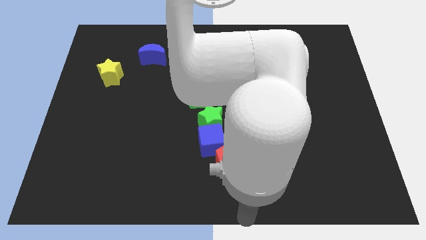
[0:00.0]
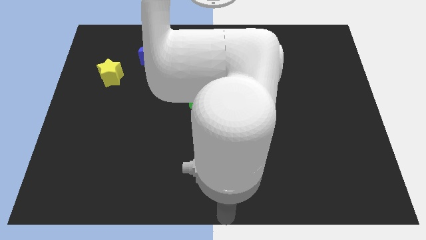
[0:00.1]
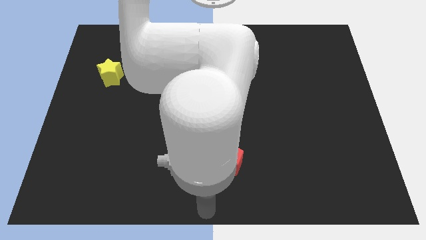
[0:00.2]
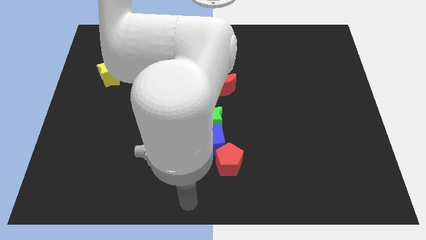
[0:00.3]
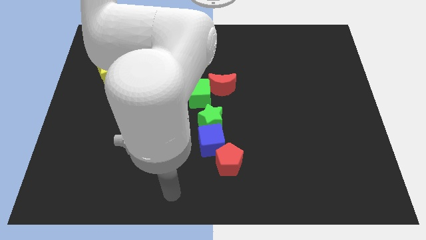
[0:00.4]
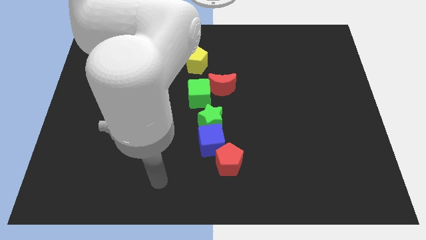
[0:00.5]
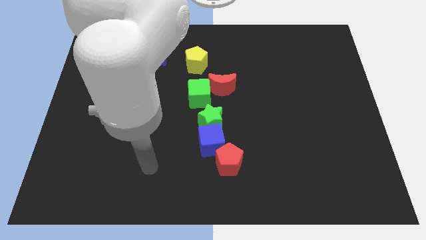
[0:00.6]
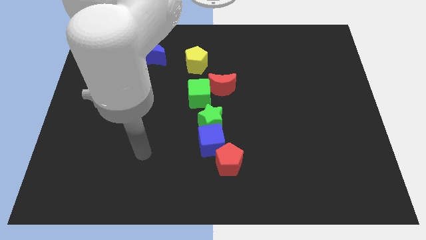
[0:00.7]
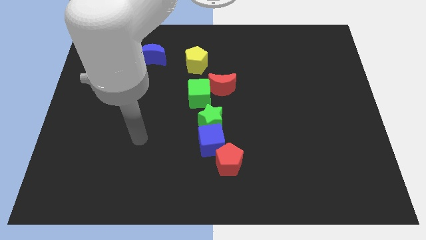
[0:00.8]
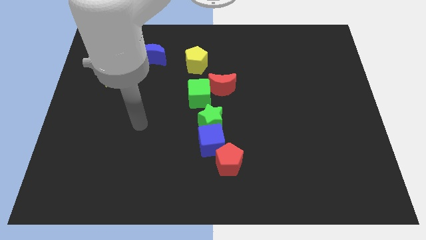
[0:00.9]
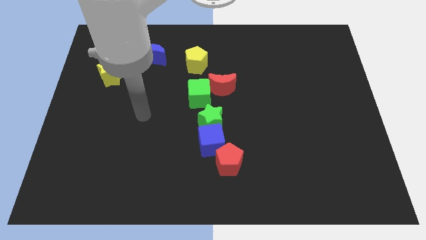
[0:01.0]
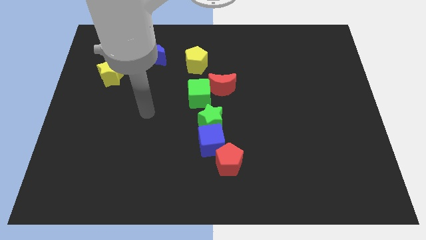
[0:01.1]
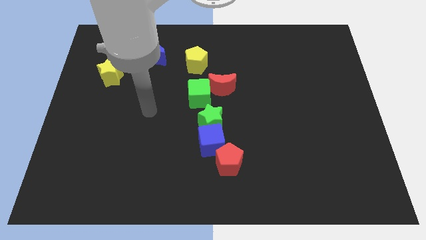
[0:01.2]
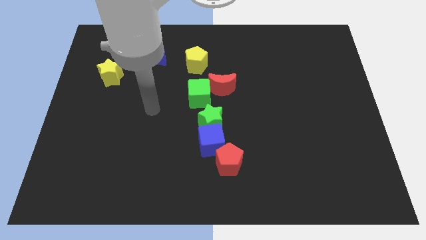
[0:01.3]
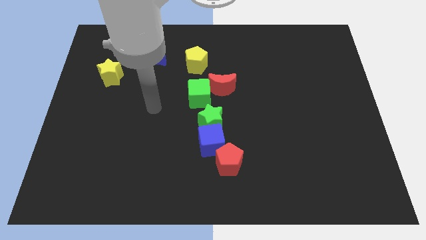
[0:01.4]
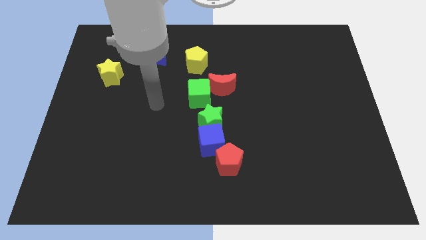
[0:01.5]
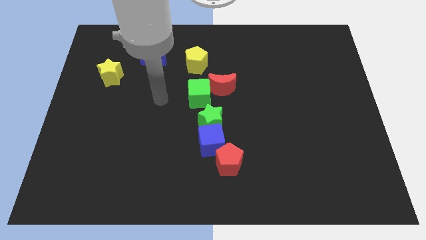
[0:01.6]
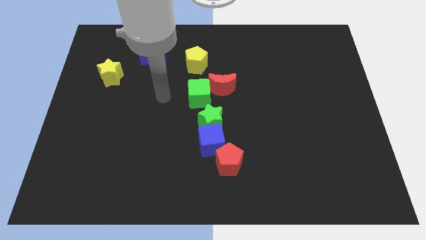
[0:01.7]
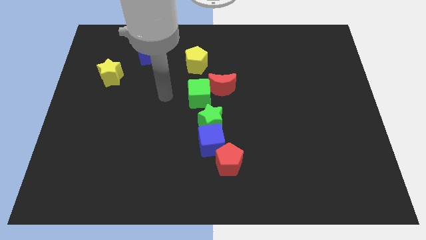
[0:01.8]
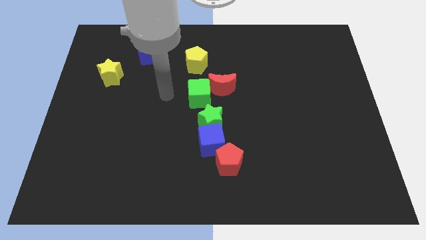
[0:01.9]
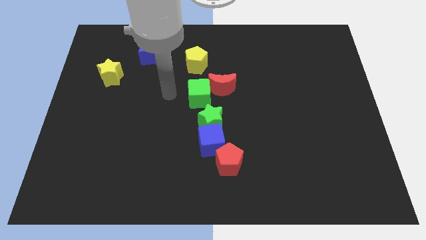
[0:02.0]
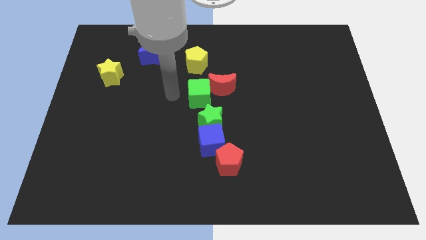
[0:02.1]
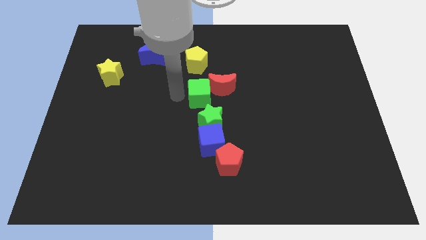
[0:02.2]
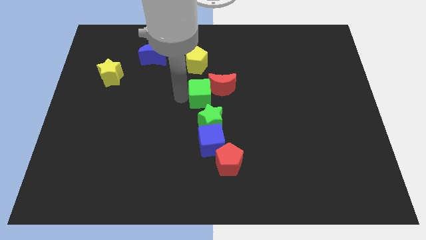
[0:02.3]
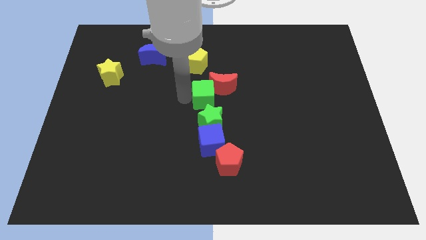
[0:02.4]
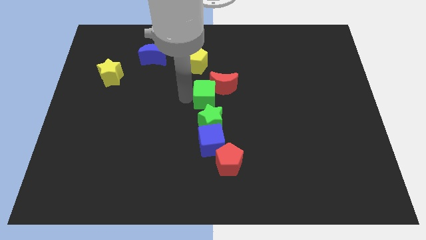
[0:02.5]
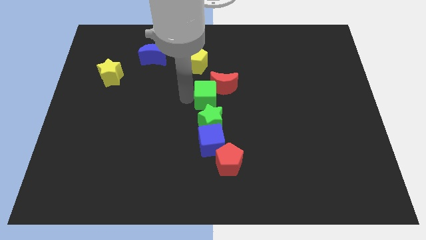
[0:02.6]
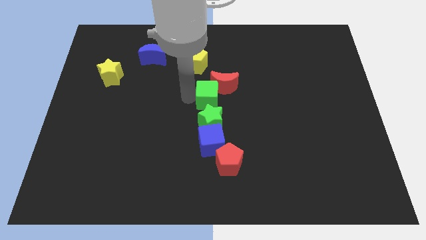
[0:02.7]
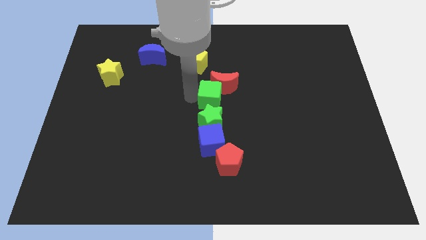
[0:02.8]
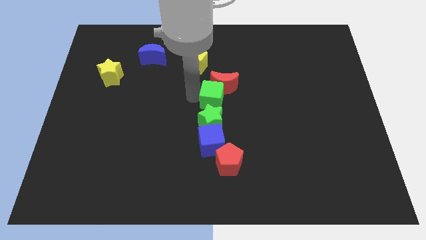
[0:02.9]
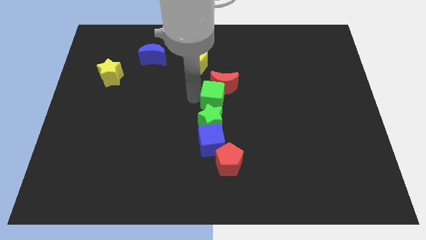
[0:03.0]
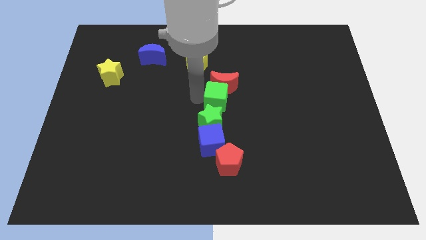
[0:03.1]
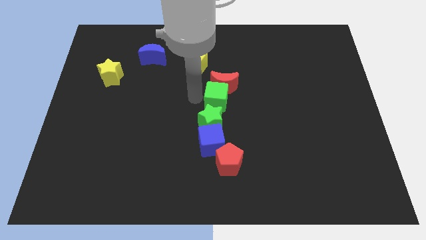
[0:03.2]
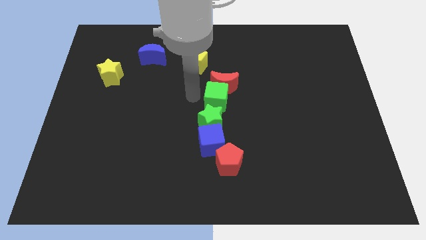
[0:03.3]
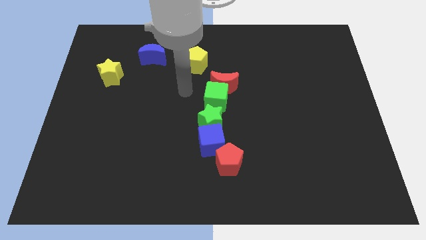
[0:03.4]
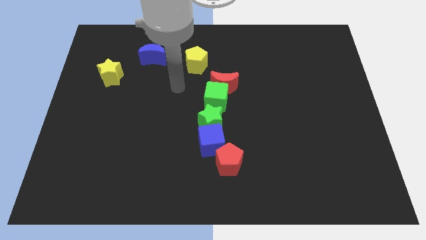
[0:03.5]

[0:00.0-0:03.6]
push the green cube to the bottom of the red crescent

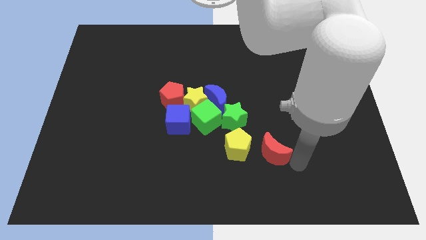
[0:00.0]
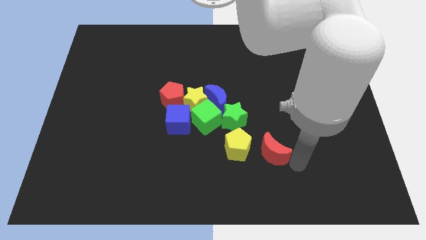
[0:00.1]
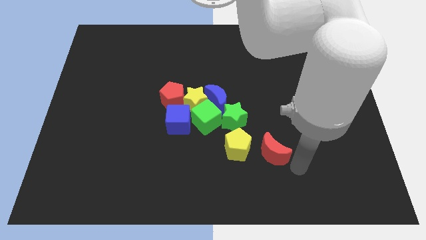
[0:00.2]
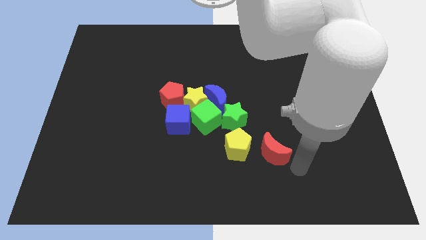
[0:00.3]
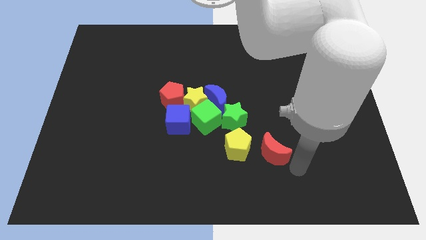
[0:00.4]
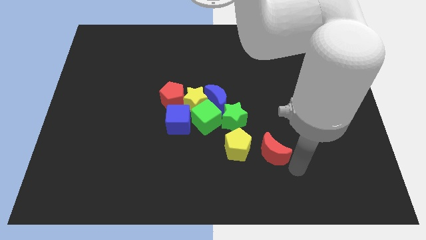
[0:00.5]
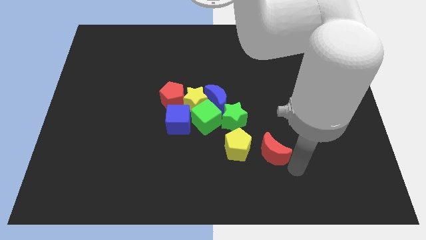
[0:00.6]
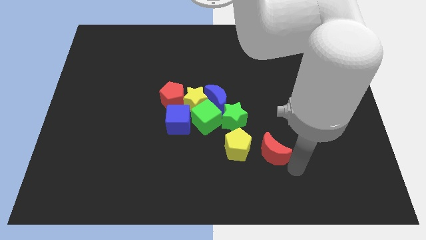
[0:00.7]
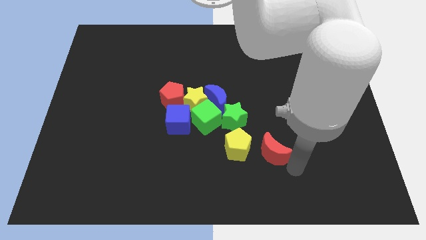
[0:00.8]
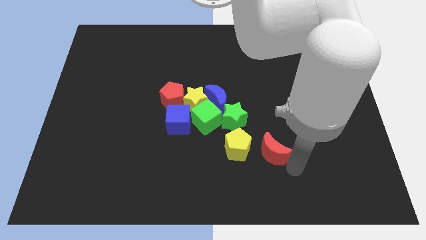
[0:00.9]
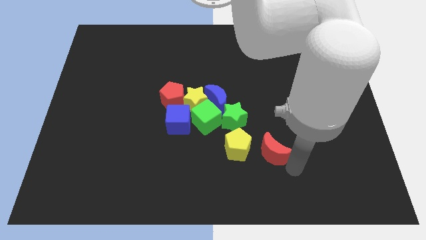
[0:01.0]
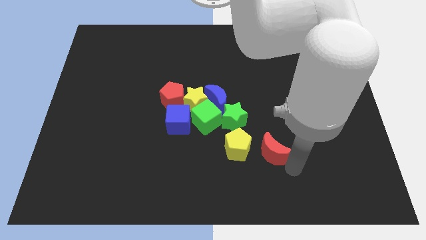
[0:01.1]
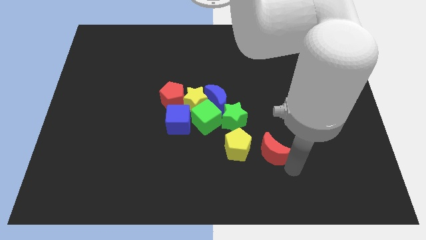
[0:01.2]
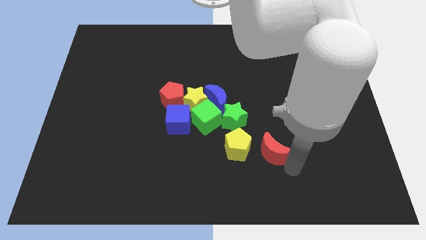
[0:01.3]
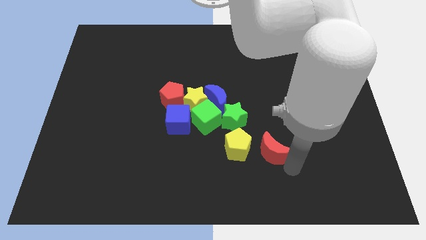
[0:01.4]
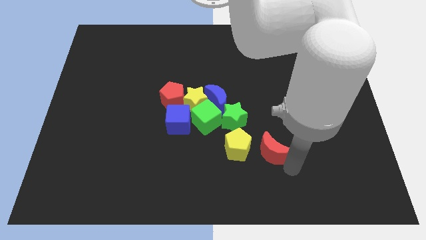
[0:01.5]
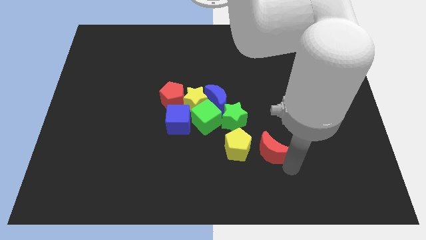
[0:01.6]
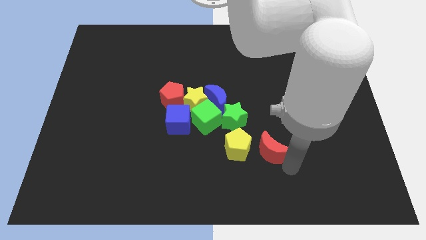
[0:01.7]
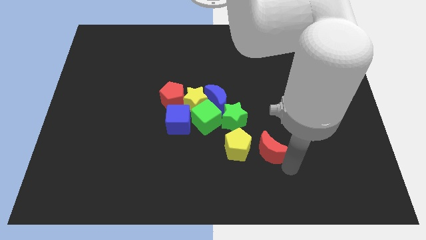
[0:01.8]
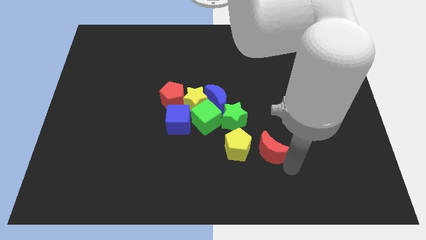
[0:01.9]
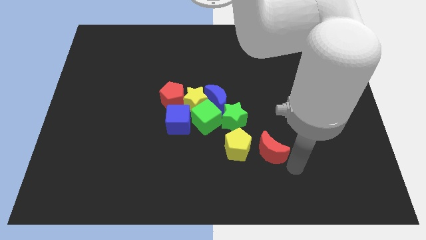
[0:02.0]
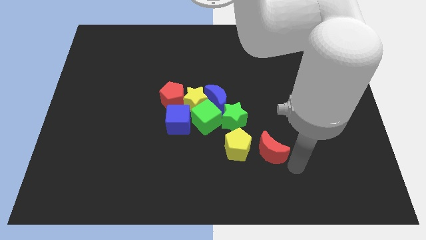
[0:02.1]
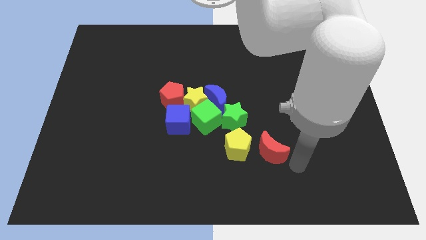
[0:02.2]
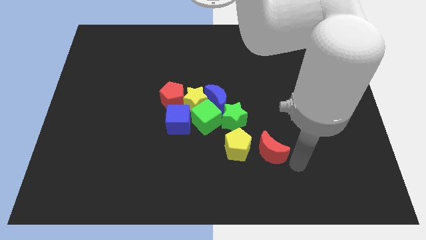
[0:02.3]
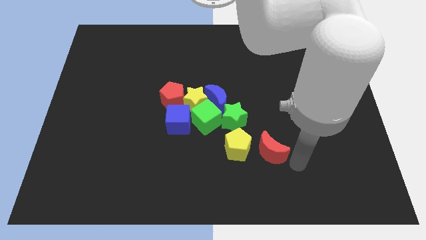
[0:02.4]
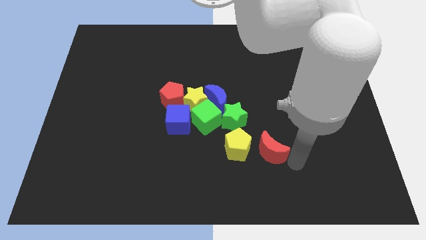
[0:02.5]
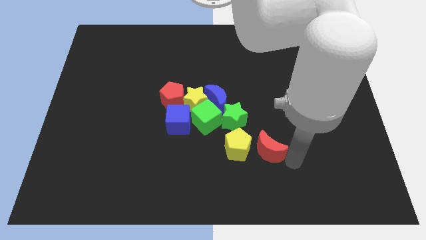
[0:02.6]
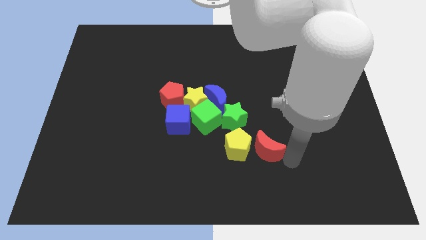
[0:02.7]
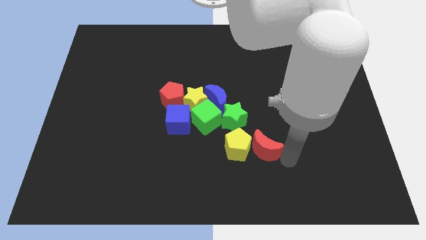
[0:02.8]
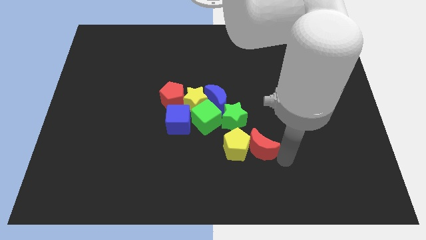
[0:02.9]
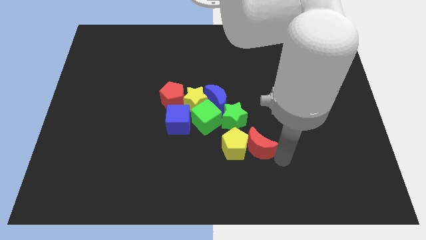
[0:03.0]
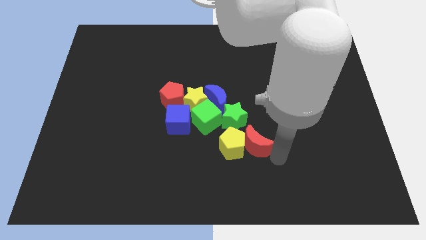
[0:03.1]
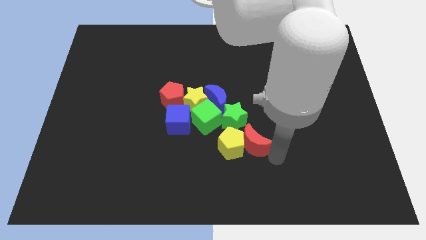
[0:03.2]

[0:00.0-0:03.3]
push the red moon into the yellow pentagon

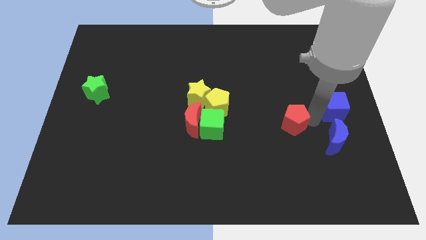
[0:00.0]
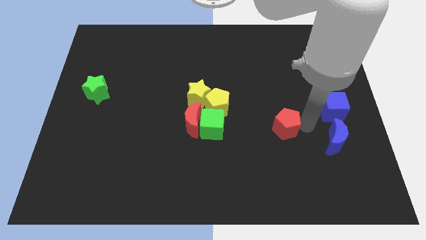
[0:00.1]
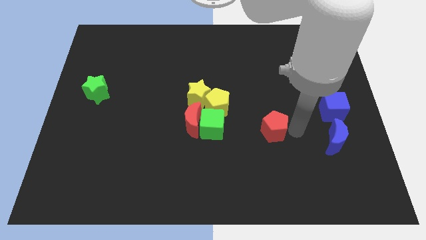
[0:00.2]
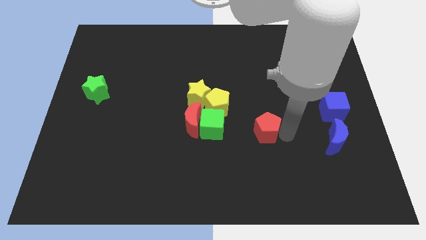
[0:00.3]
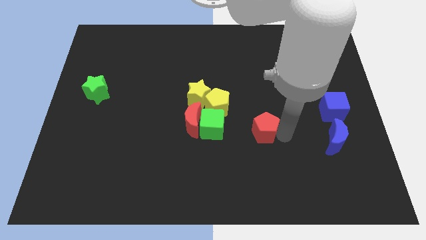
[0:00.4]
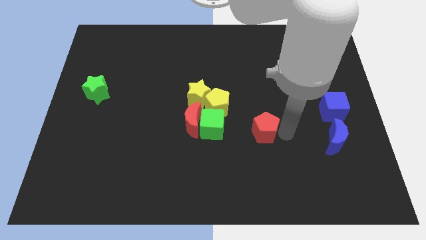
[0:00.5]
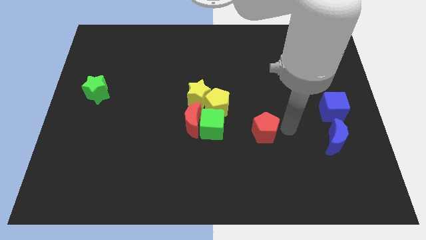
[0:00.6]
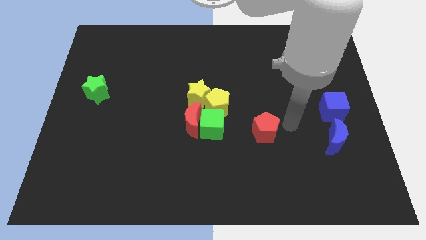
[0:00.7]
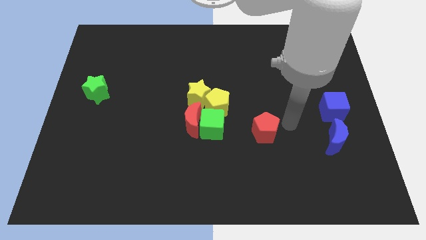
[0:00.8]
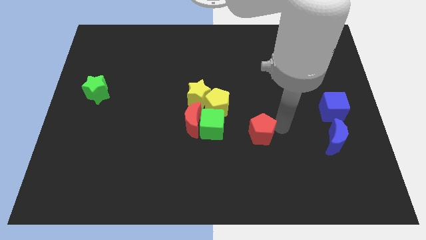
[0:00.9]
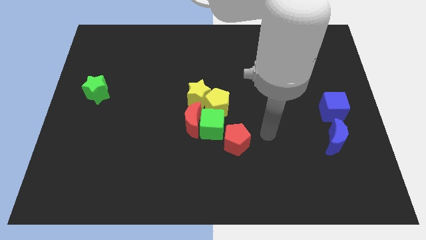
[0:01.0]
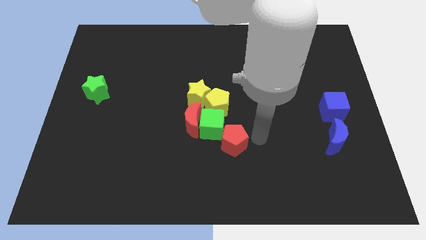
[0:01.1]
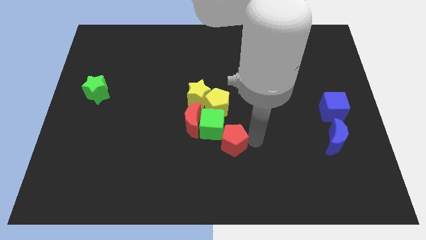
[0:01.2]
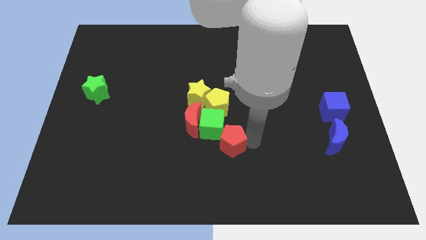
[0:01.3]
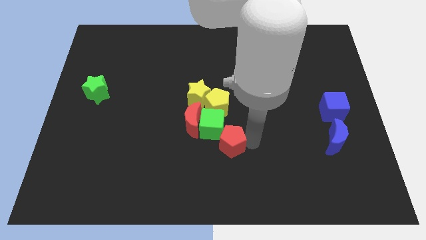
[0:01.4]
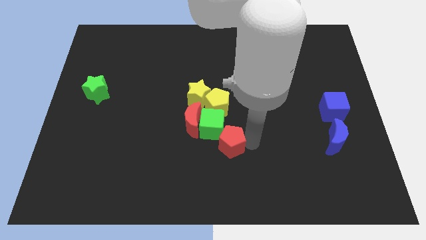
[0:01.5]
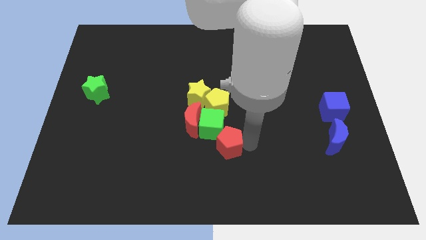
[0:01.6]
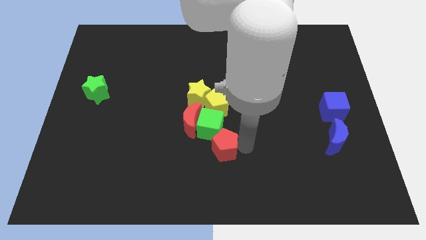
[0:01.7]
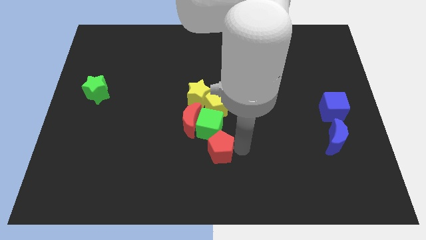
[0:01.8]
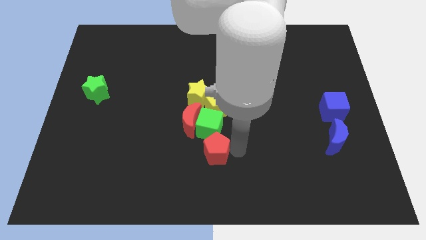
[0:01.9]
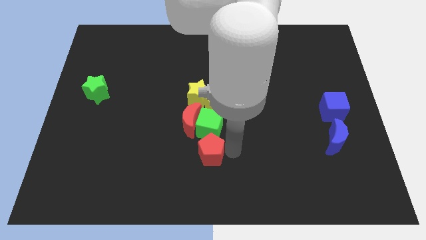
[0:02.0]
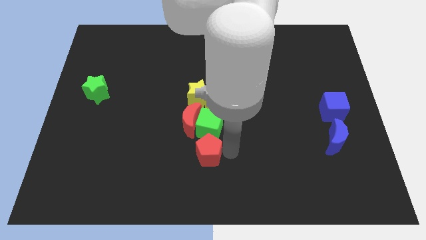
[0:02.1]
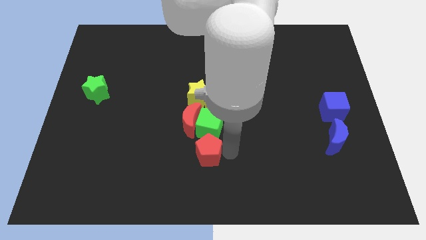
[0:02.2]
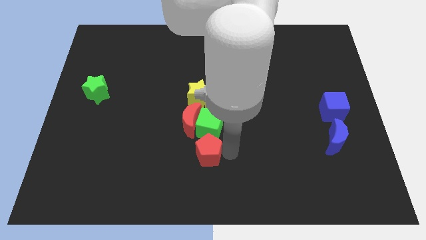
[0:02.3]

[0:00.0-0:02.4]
place the red pentagon under the green cube
